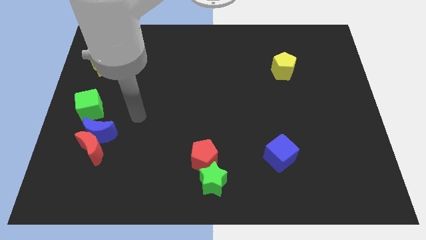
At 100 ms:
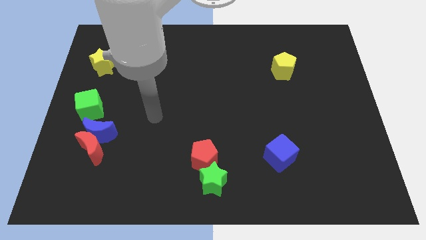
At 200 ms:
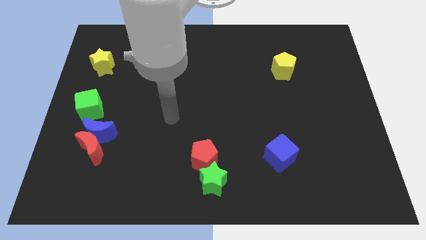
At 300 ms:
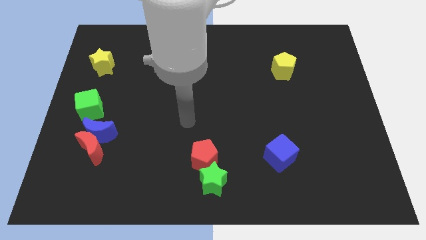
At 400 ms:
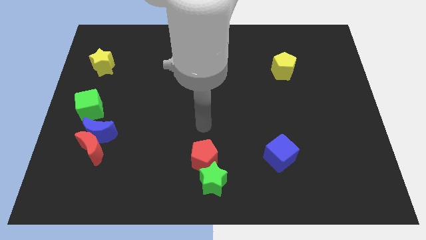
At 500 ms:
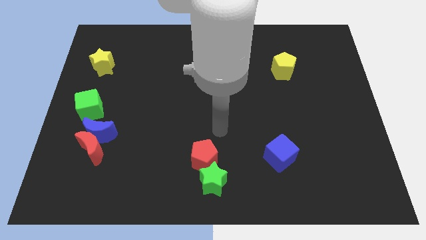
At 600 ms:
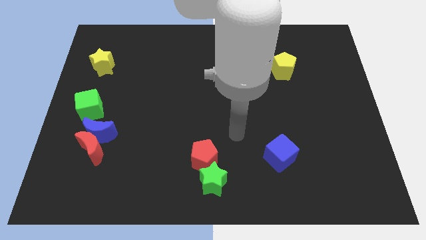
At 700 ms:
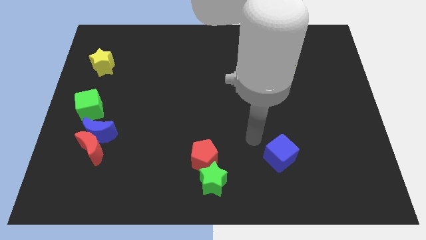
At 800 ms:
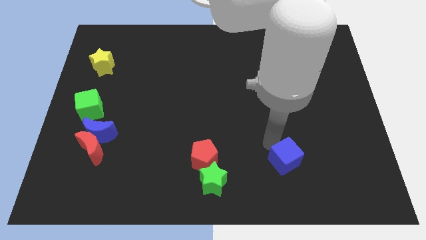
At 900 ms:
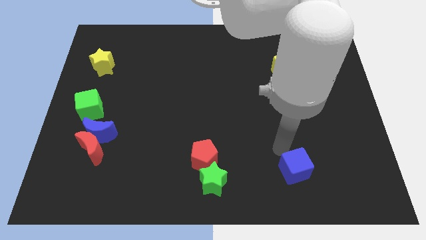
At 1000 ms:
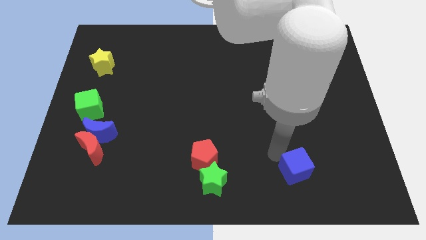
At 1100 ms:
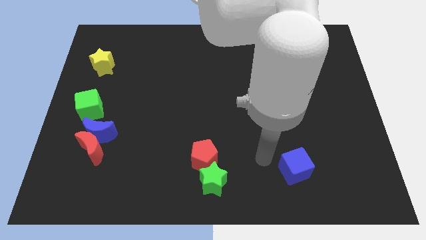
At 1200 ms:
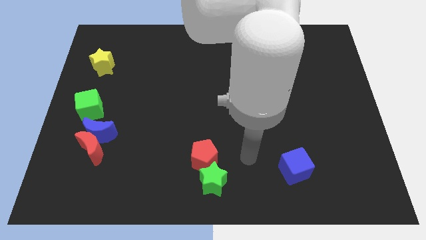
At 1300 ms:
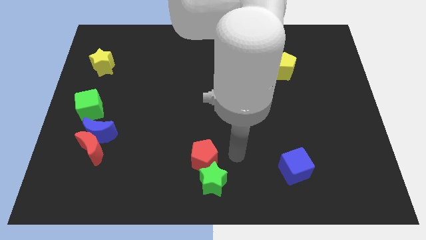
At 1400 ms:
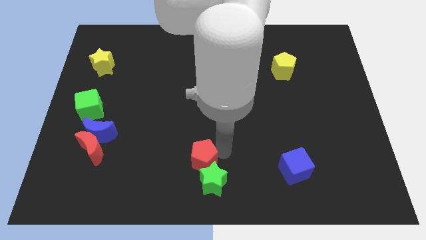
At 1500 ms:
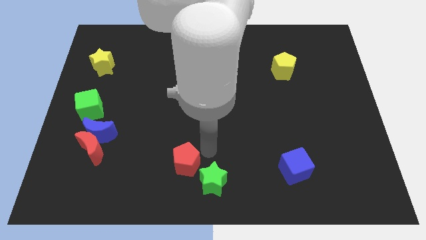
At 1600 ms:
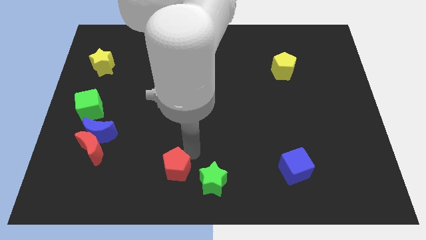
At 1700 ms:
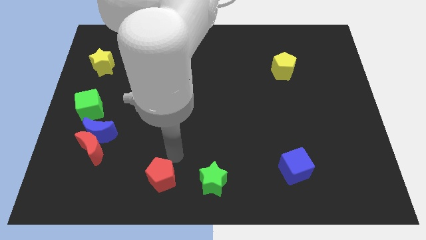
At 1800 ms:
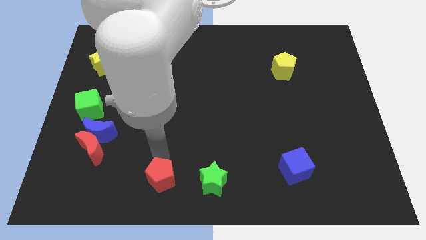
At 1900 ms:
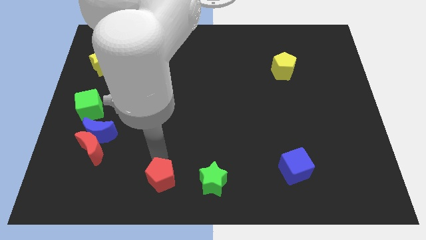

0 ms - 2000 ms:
separate the red pentagon from green star

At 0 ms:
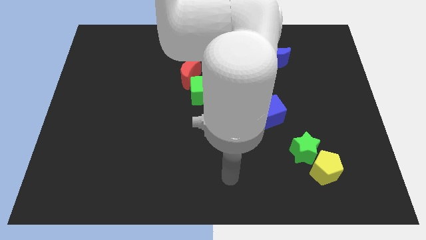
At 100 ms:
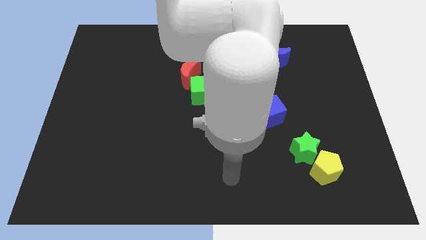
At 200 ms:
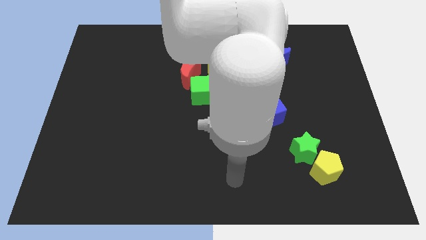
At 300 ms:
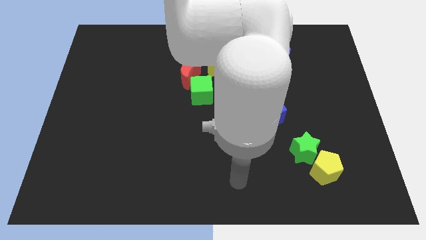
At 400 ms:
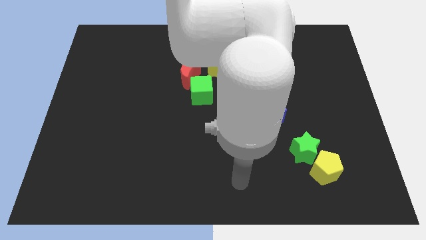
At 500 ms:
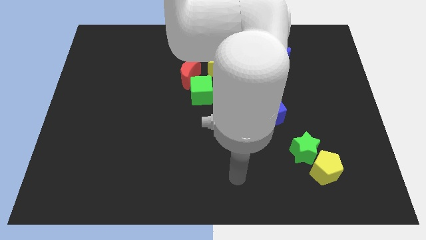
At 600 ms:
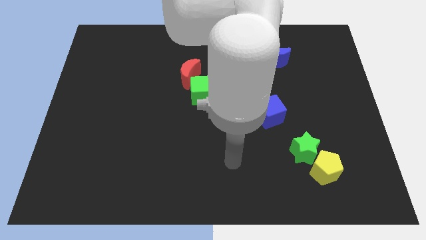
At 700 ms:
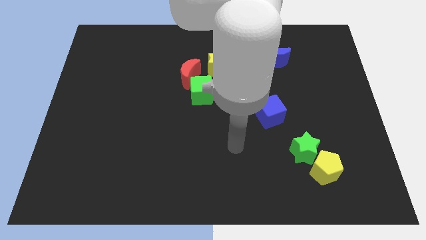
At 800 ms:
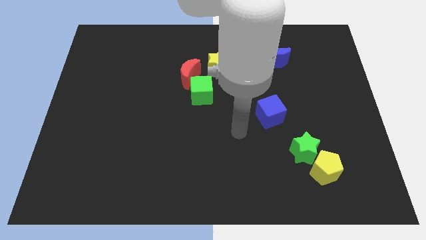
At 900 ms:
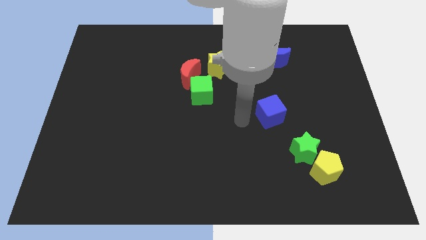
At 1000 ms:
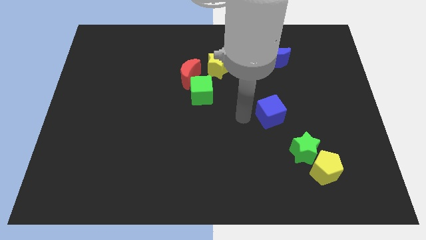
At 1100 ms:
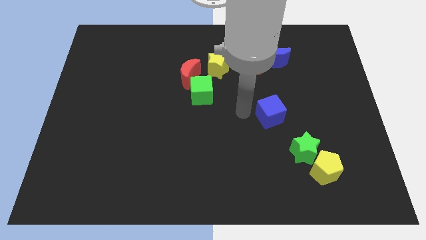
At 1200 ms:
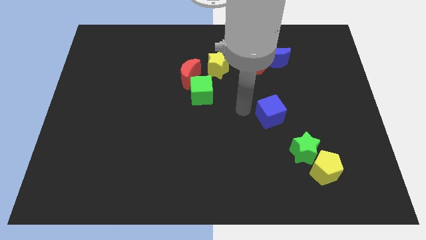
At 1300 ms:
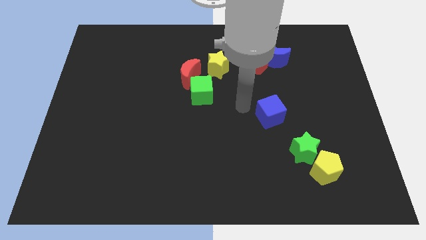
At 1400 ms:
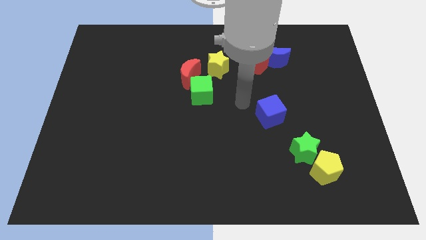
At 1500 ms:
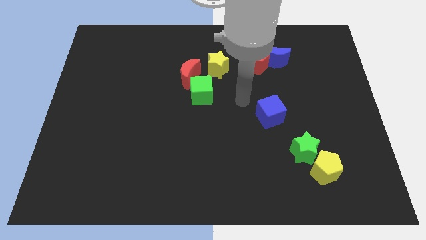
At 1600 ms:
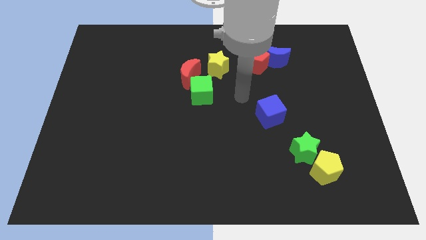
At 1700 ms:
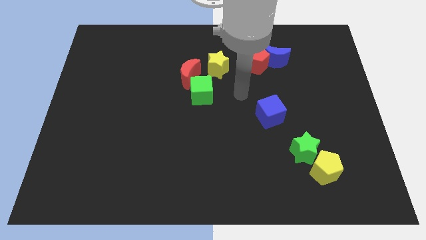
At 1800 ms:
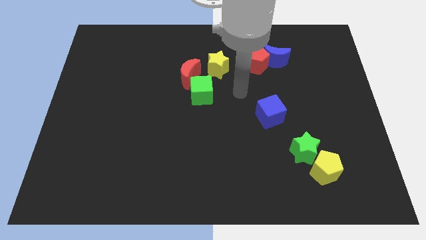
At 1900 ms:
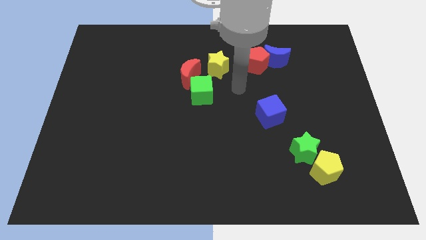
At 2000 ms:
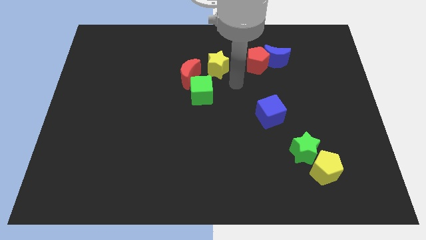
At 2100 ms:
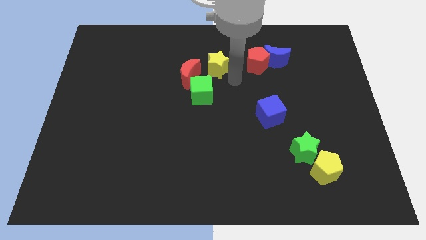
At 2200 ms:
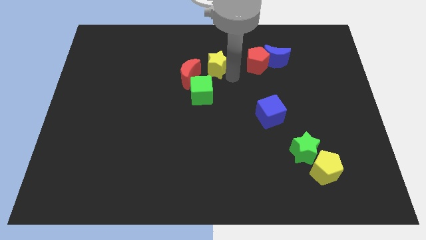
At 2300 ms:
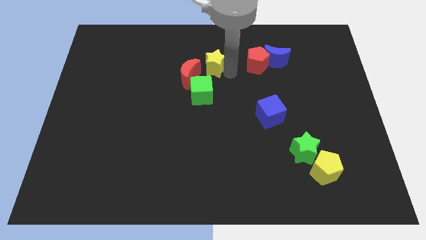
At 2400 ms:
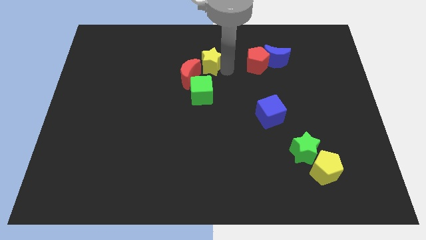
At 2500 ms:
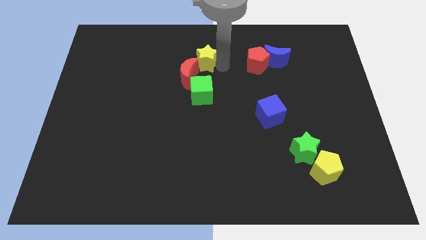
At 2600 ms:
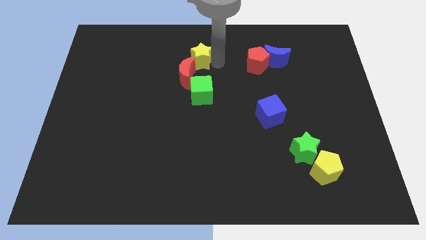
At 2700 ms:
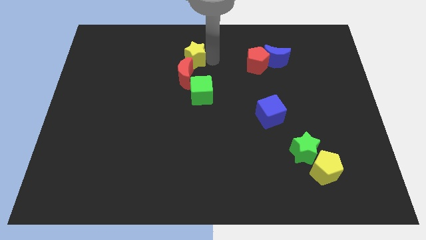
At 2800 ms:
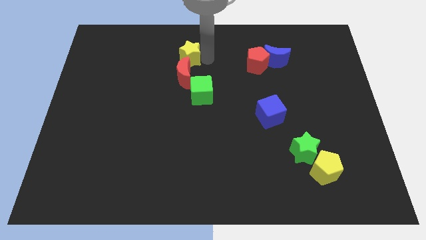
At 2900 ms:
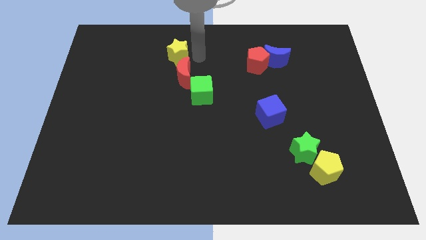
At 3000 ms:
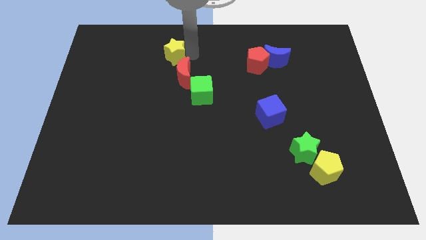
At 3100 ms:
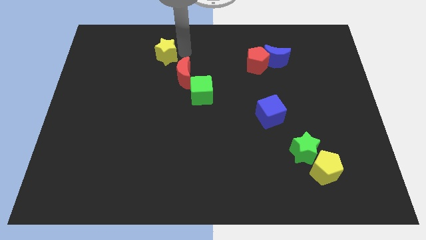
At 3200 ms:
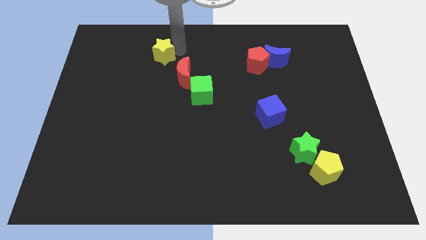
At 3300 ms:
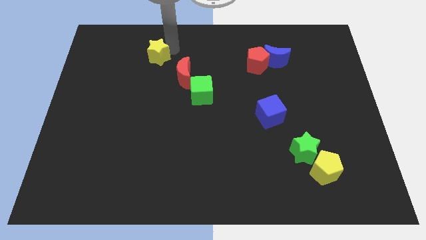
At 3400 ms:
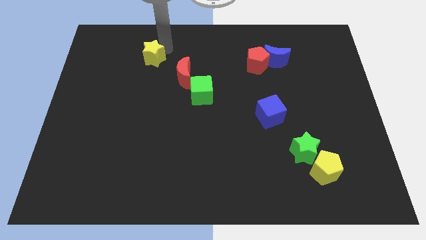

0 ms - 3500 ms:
move the yellow star diagonally on the top left side of the red crescent

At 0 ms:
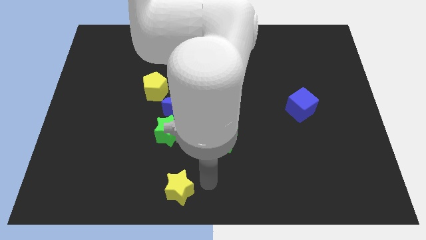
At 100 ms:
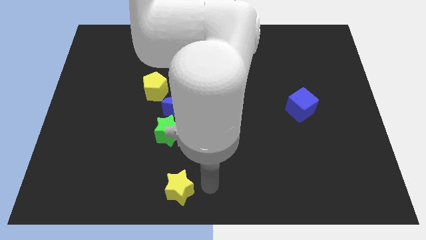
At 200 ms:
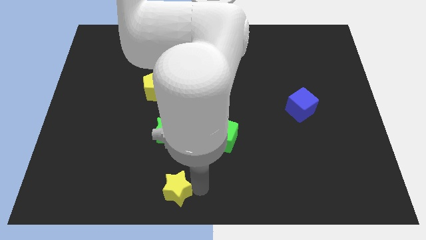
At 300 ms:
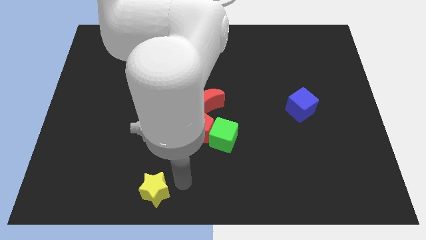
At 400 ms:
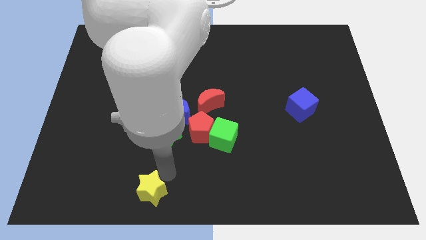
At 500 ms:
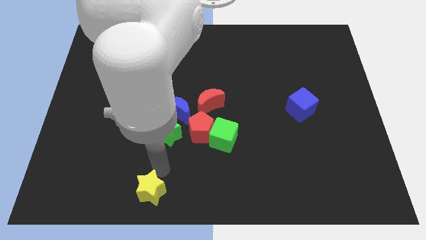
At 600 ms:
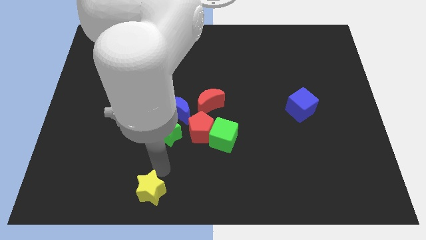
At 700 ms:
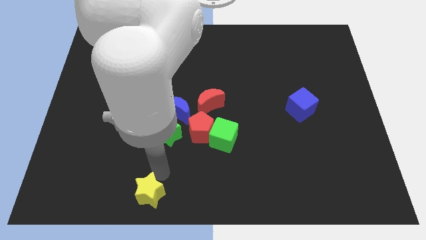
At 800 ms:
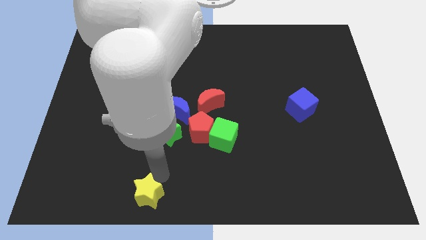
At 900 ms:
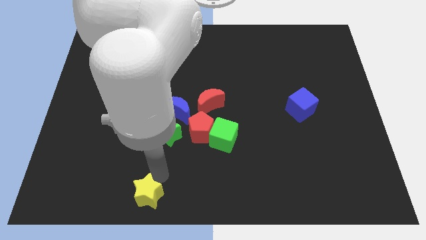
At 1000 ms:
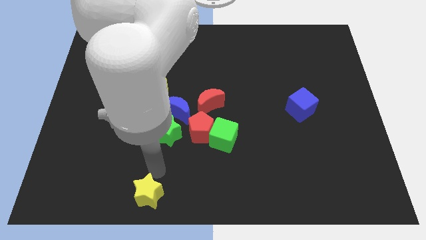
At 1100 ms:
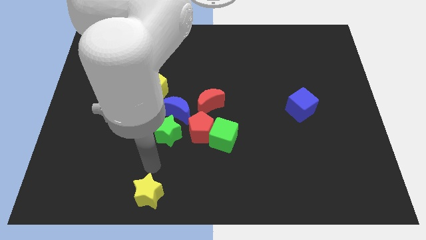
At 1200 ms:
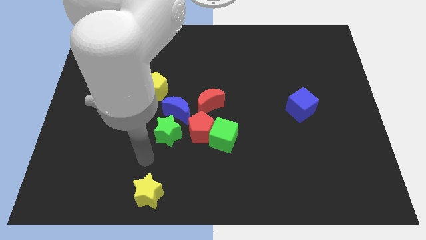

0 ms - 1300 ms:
move the yellow star vertical to the yellow pentagon

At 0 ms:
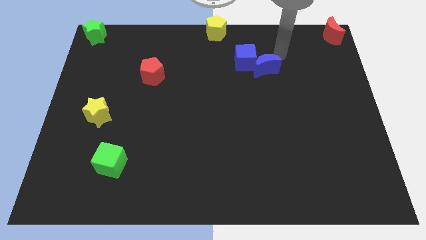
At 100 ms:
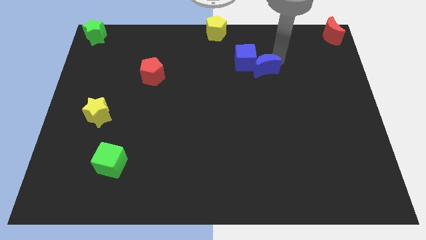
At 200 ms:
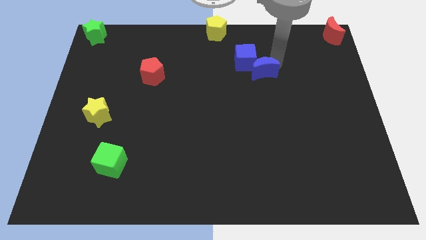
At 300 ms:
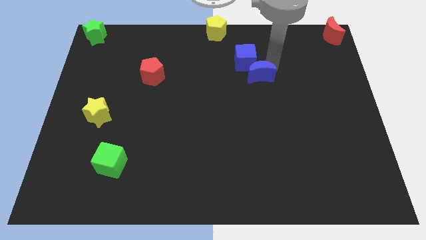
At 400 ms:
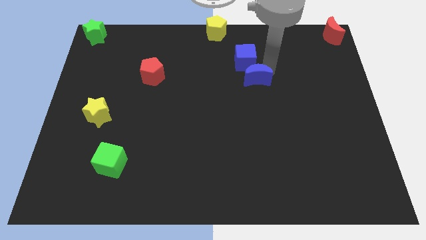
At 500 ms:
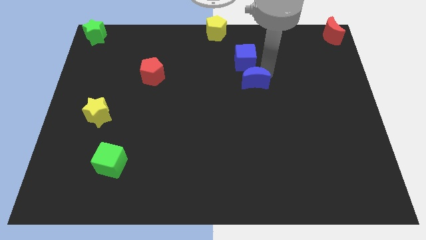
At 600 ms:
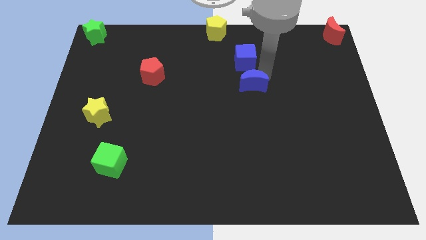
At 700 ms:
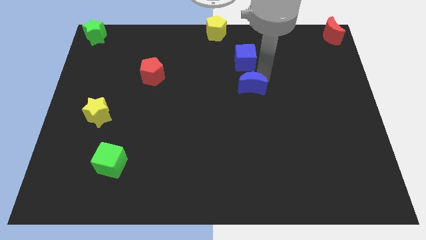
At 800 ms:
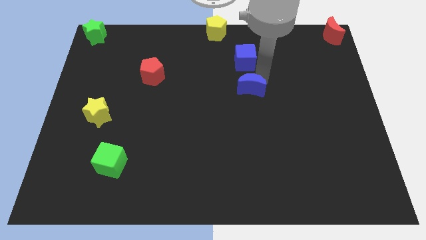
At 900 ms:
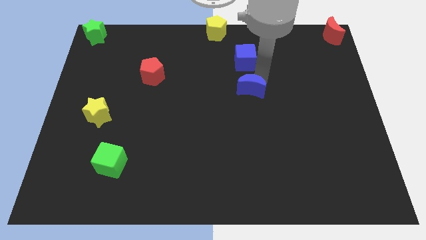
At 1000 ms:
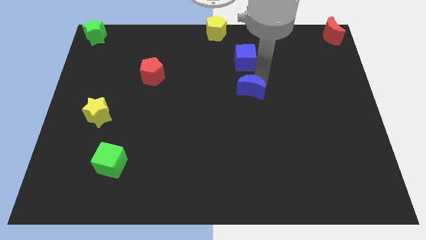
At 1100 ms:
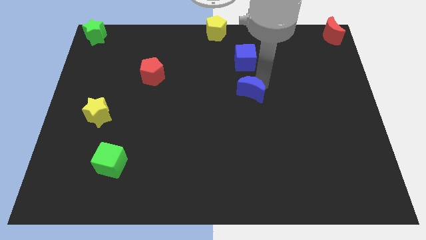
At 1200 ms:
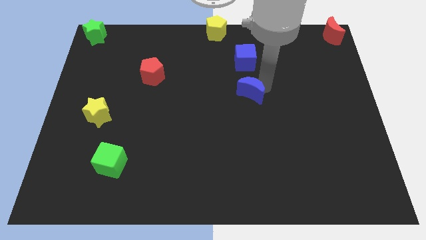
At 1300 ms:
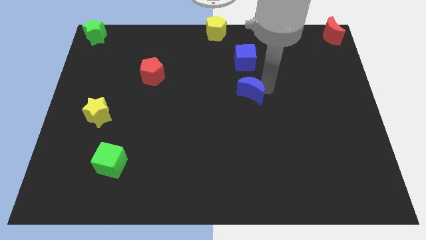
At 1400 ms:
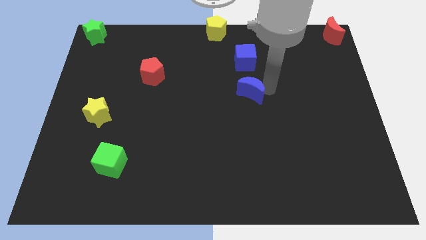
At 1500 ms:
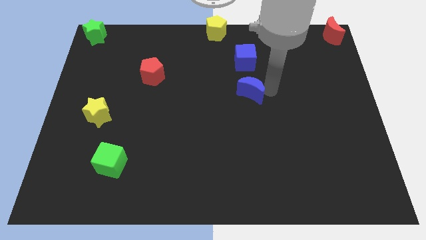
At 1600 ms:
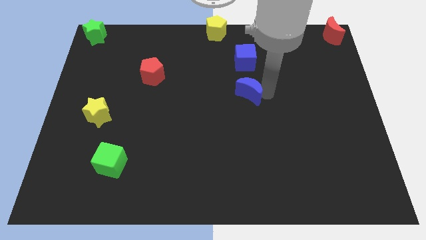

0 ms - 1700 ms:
move the blue crescent parallel to the bottom of the blue cube

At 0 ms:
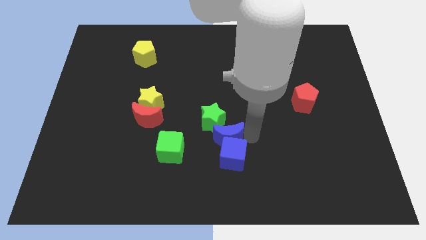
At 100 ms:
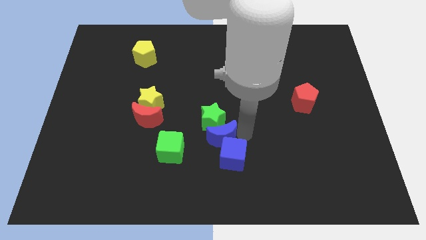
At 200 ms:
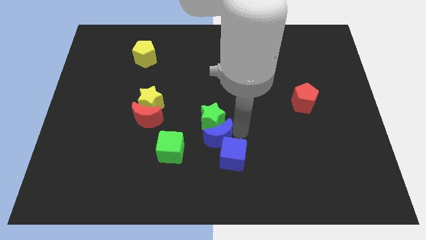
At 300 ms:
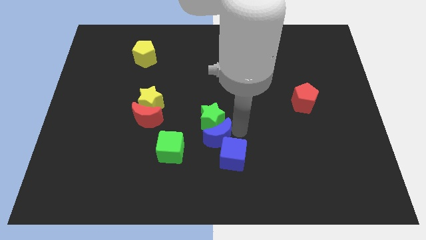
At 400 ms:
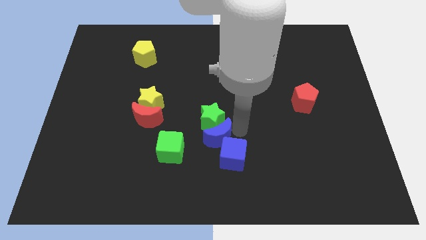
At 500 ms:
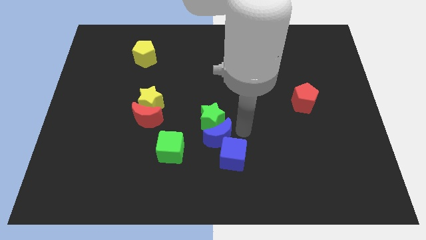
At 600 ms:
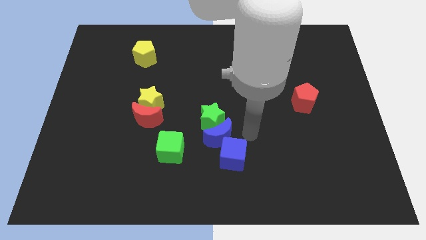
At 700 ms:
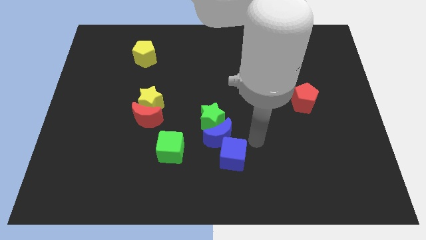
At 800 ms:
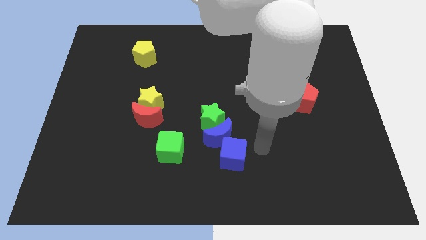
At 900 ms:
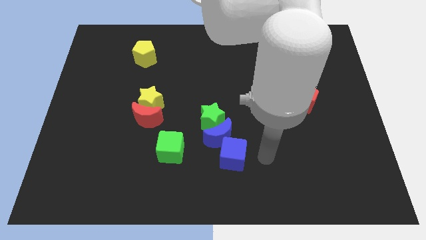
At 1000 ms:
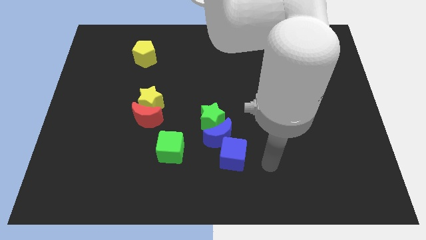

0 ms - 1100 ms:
move your arm away from the blue moon
